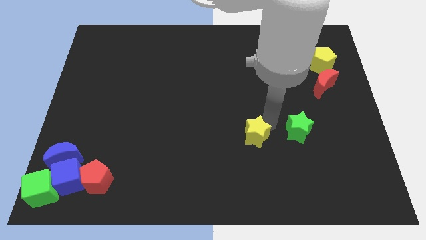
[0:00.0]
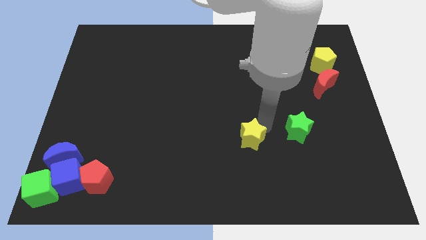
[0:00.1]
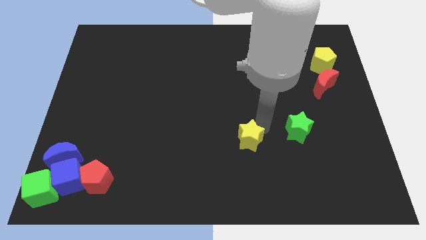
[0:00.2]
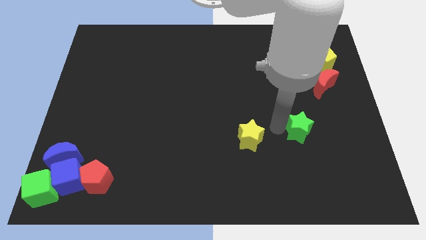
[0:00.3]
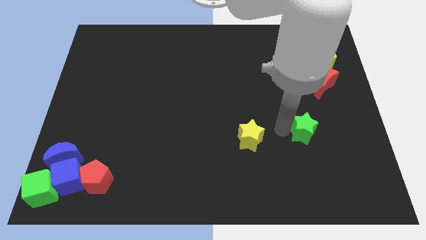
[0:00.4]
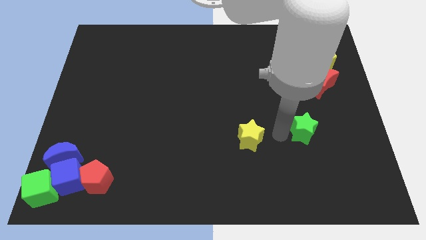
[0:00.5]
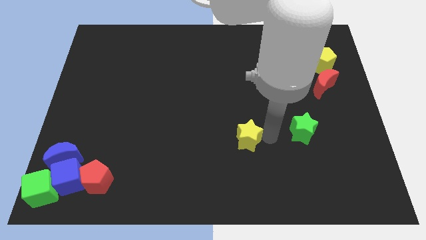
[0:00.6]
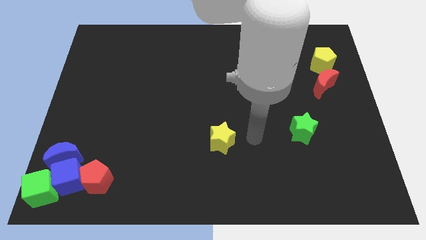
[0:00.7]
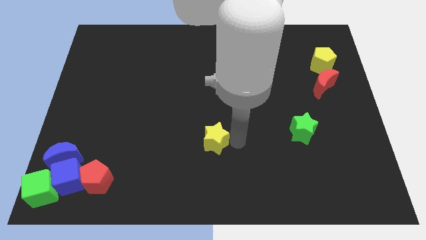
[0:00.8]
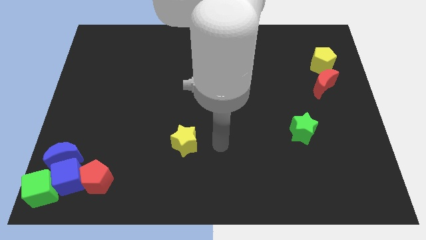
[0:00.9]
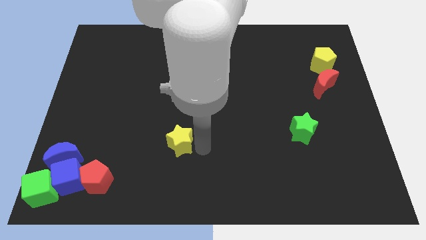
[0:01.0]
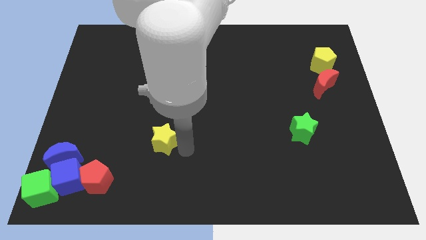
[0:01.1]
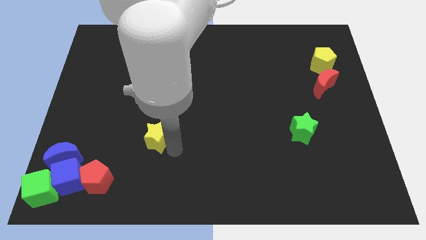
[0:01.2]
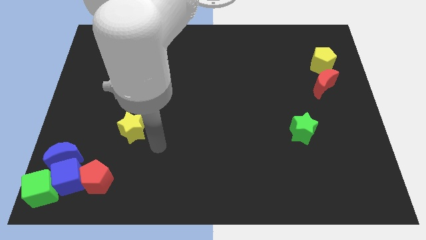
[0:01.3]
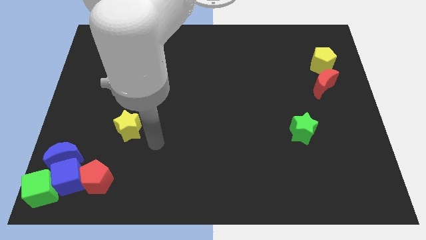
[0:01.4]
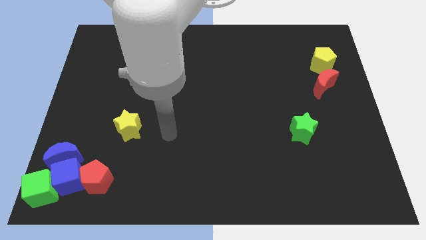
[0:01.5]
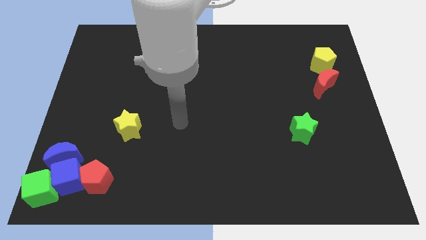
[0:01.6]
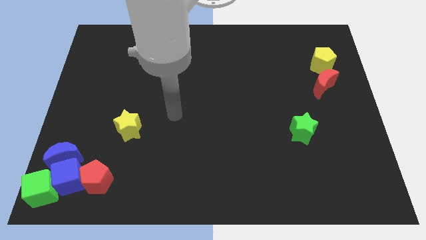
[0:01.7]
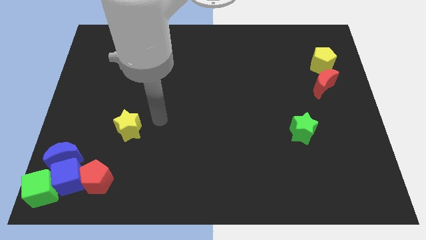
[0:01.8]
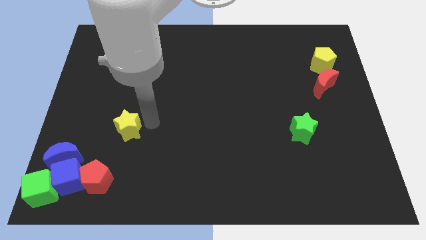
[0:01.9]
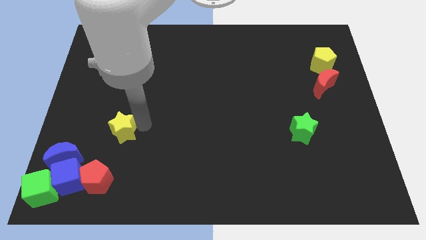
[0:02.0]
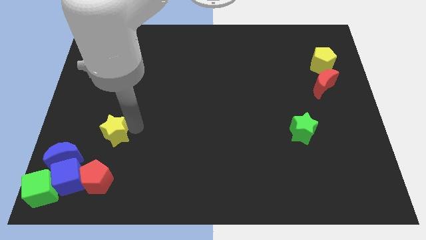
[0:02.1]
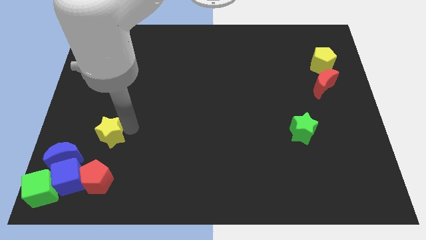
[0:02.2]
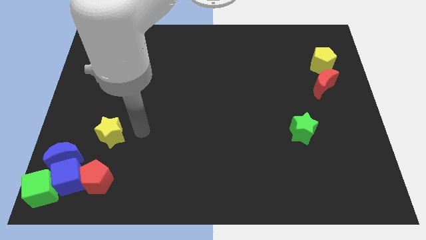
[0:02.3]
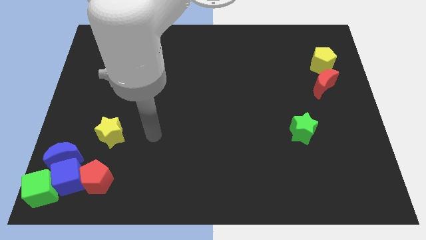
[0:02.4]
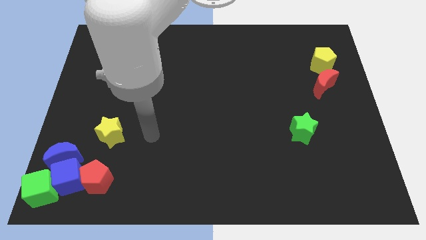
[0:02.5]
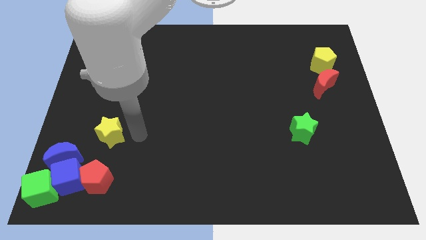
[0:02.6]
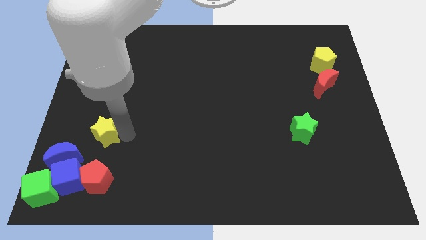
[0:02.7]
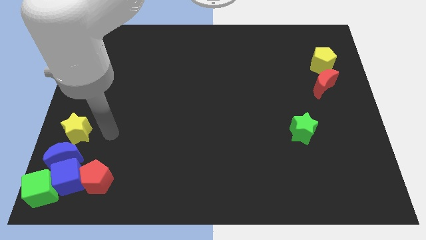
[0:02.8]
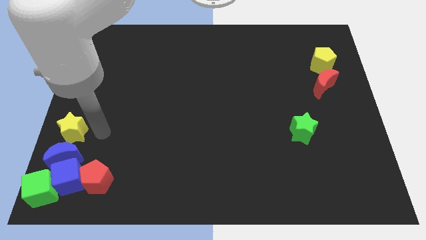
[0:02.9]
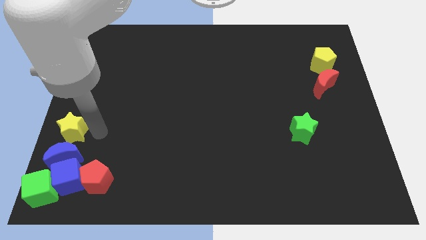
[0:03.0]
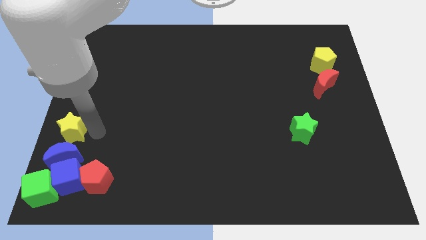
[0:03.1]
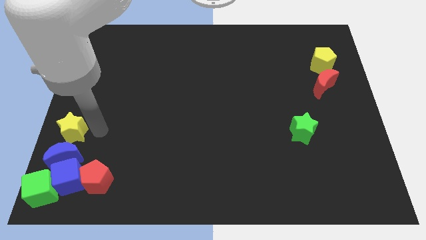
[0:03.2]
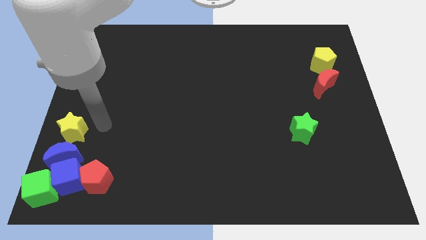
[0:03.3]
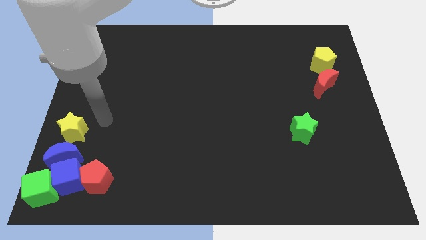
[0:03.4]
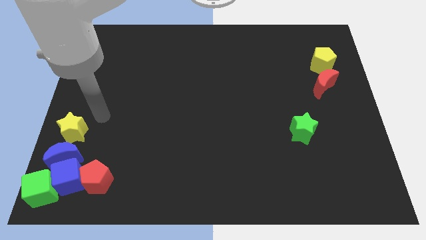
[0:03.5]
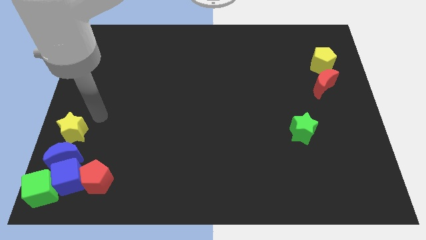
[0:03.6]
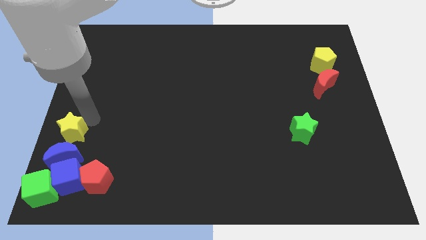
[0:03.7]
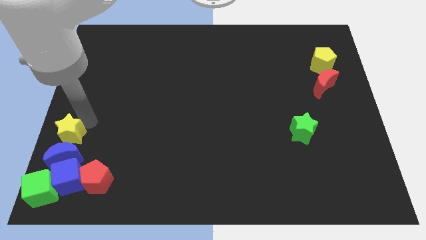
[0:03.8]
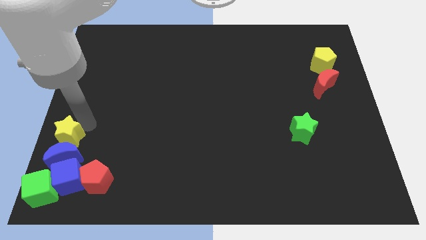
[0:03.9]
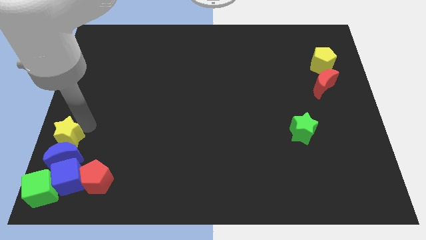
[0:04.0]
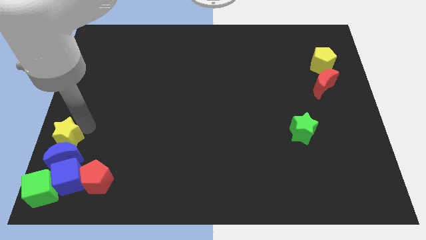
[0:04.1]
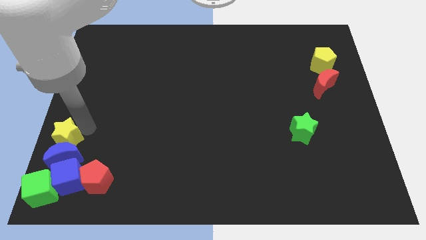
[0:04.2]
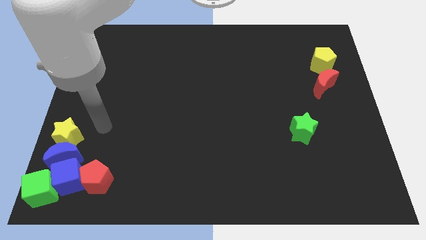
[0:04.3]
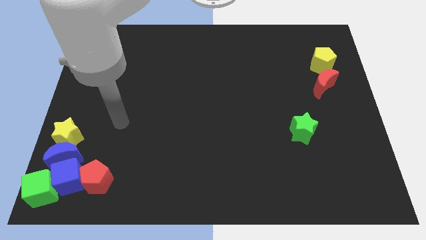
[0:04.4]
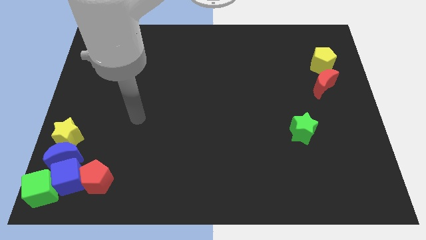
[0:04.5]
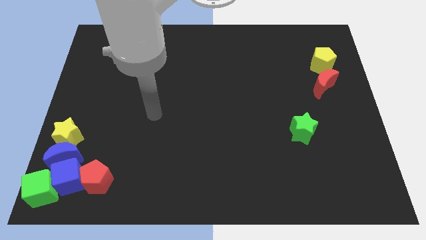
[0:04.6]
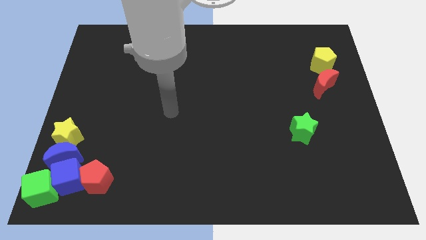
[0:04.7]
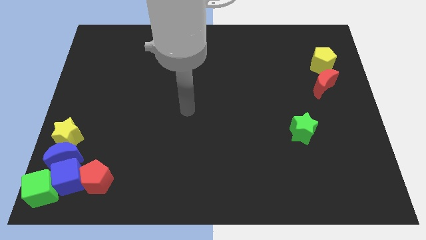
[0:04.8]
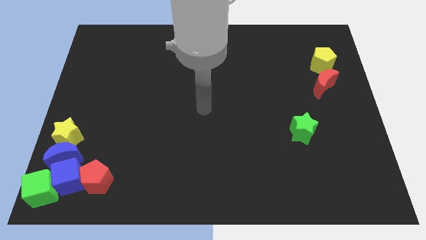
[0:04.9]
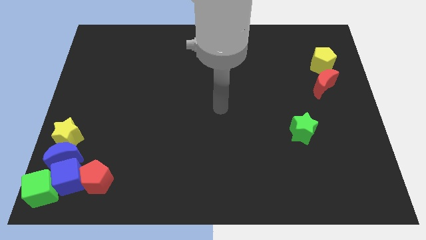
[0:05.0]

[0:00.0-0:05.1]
move the yellow star above the blue moon

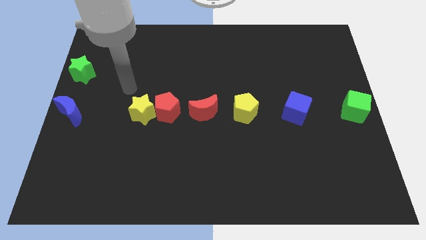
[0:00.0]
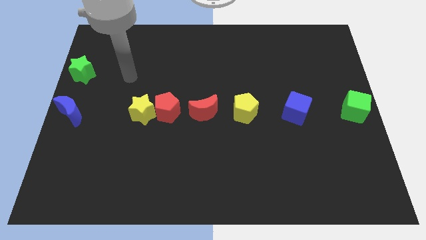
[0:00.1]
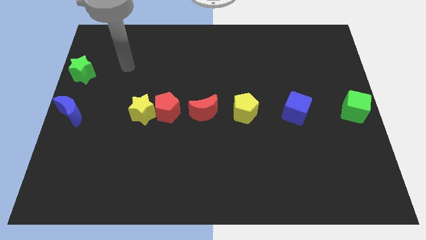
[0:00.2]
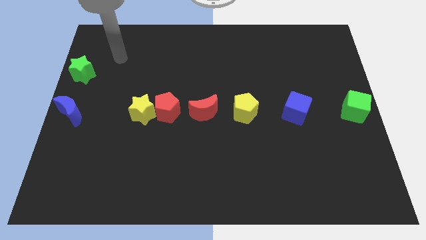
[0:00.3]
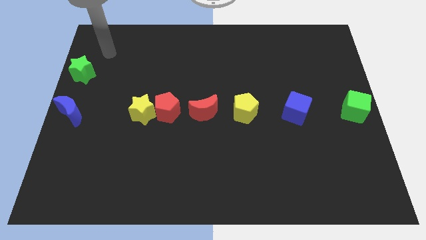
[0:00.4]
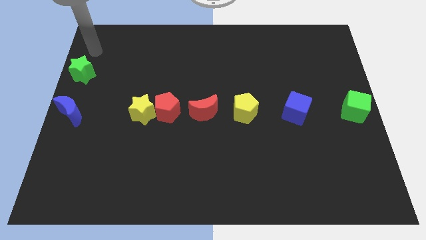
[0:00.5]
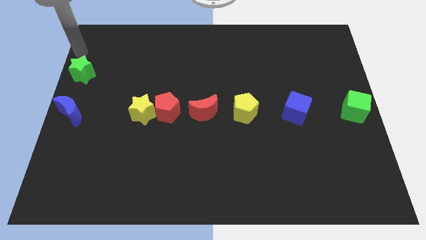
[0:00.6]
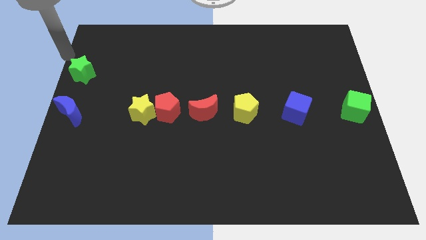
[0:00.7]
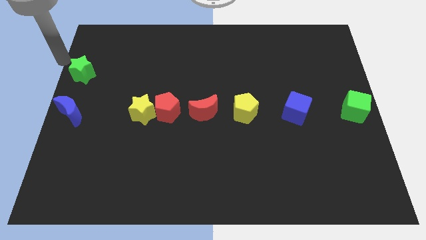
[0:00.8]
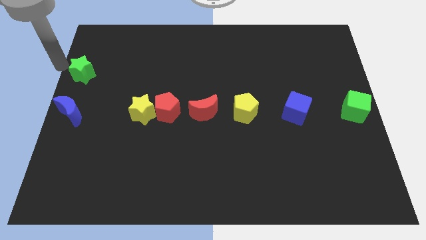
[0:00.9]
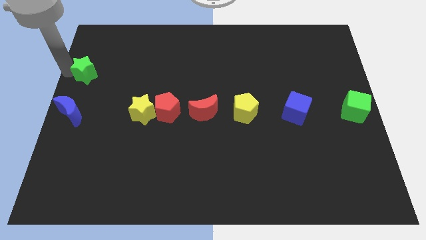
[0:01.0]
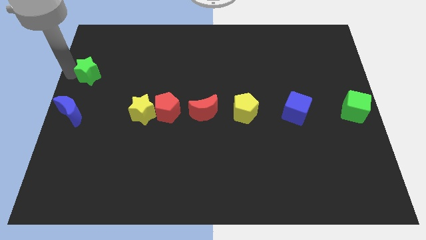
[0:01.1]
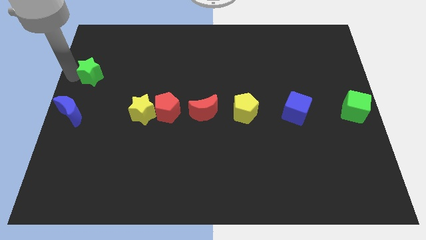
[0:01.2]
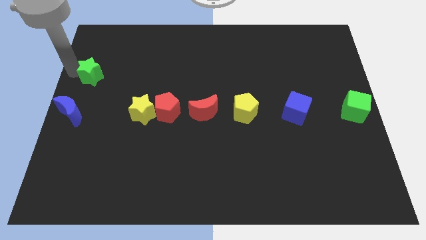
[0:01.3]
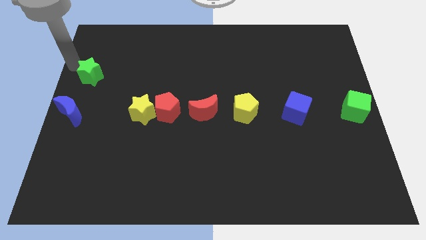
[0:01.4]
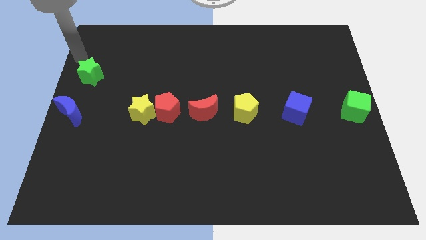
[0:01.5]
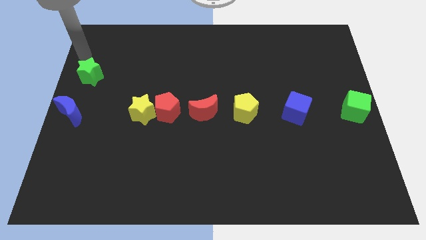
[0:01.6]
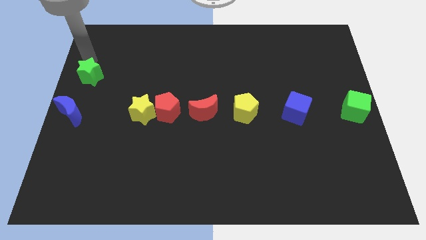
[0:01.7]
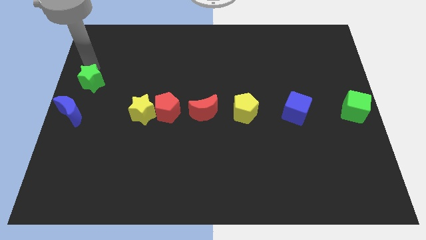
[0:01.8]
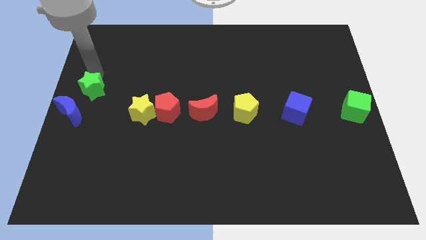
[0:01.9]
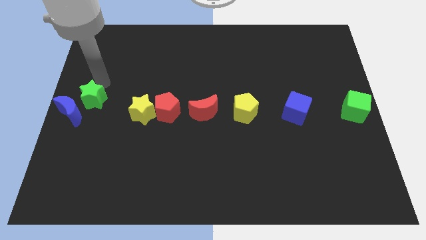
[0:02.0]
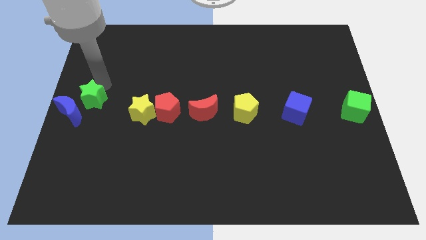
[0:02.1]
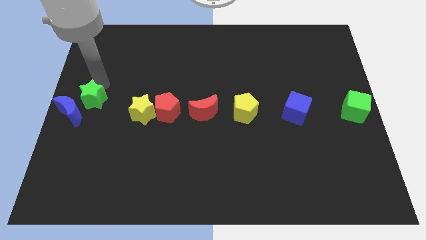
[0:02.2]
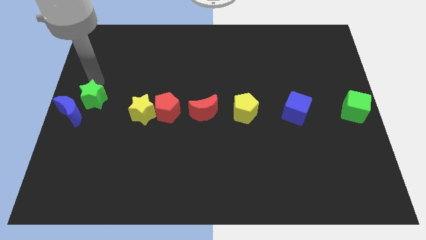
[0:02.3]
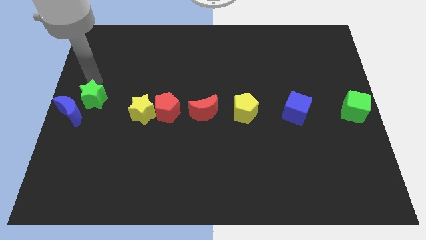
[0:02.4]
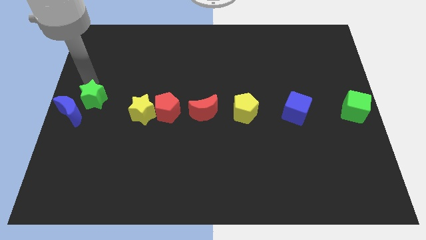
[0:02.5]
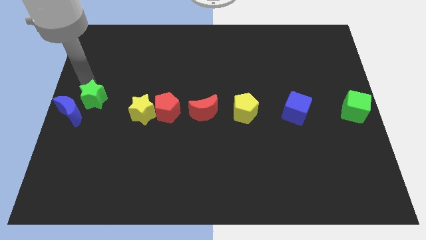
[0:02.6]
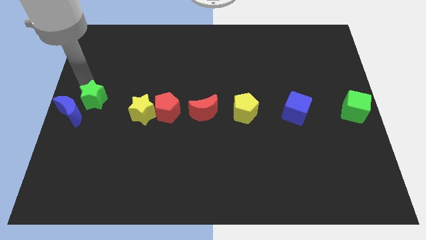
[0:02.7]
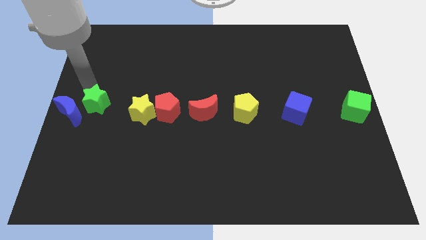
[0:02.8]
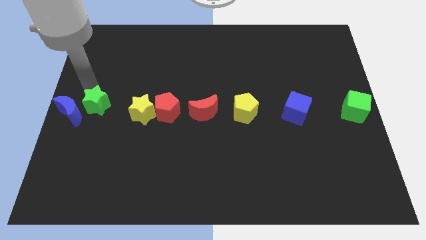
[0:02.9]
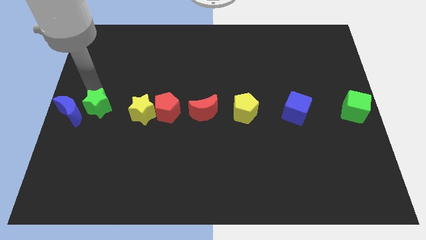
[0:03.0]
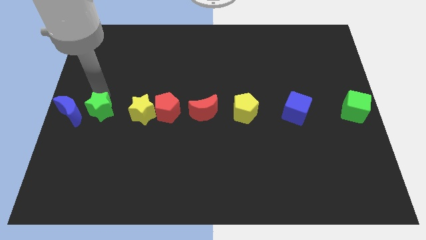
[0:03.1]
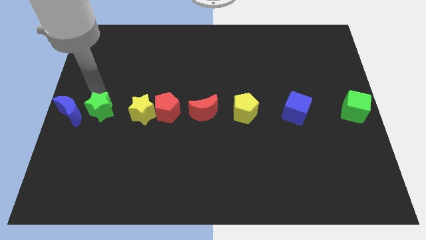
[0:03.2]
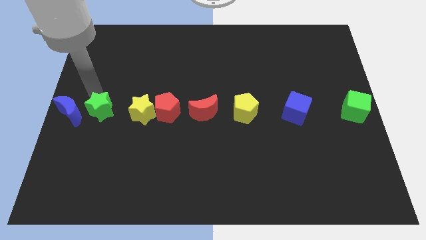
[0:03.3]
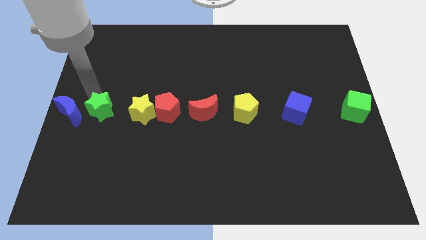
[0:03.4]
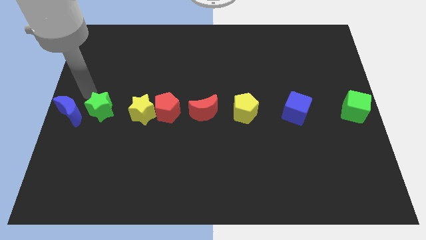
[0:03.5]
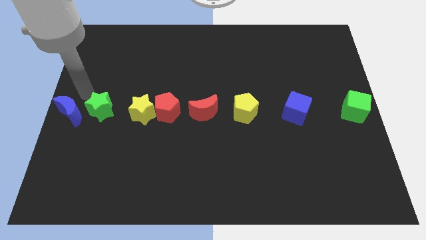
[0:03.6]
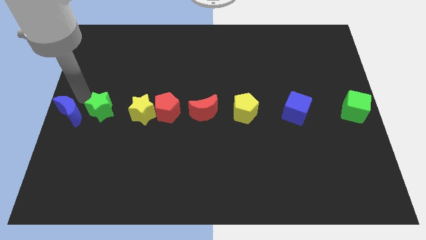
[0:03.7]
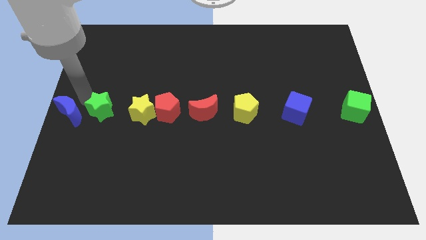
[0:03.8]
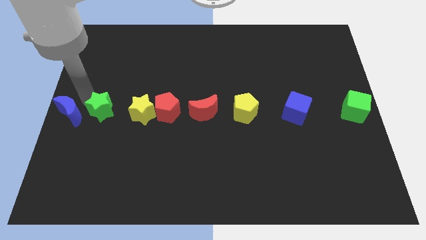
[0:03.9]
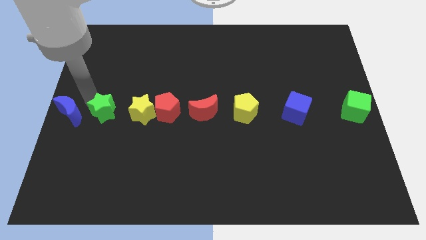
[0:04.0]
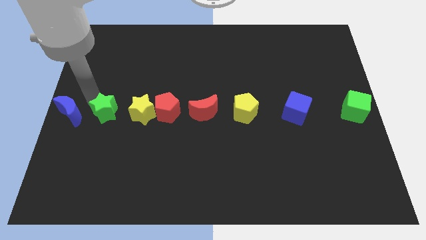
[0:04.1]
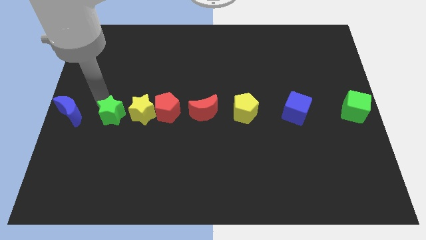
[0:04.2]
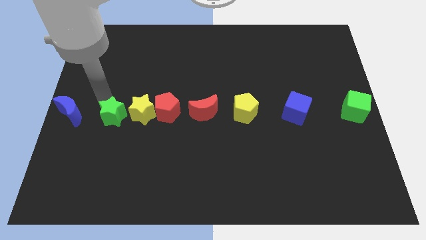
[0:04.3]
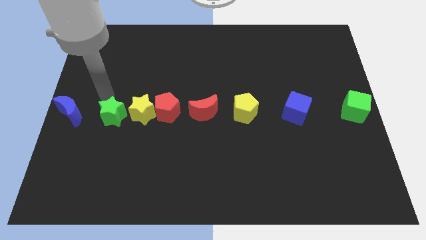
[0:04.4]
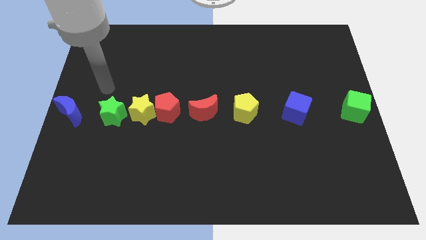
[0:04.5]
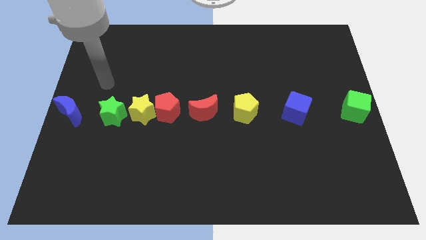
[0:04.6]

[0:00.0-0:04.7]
push the green star in between yellow star and blue crescent
